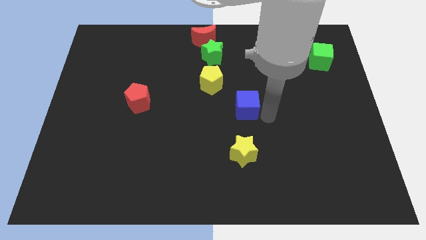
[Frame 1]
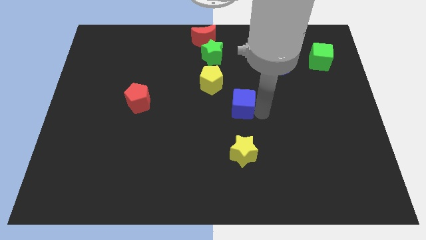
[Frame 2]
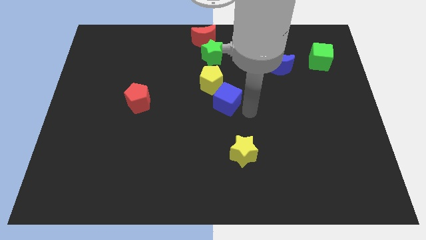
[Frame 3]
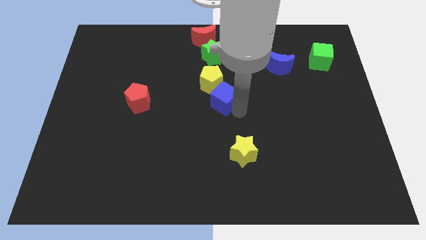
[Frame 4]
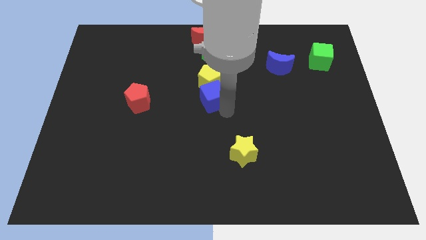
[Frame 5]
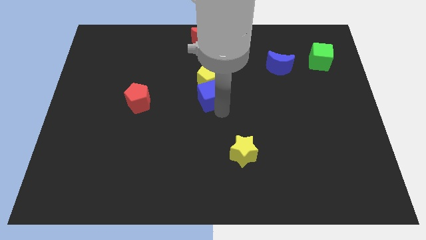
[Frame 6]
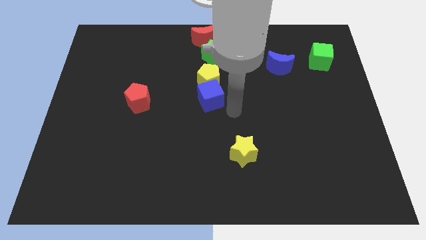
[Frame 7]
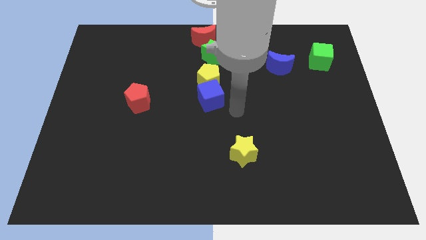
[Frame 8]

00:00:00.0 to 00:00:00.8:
push the blue cube into the yellow pentagon

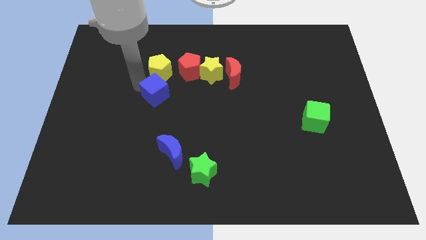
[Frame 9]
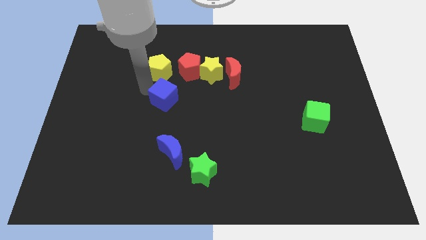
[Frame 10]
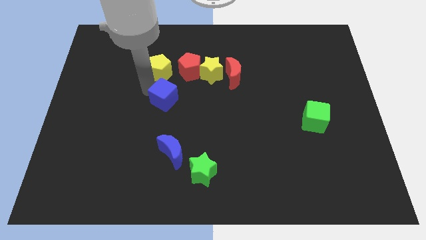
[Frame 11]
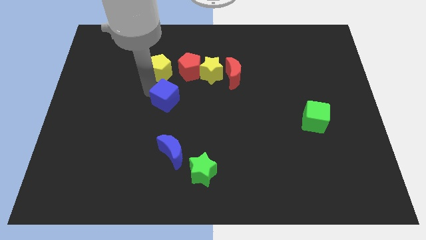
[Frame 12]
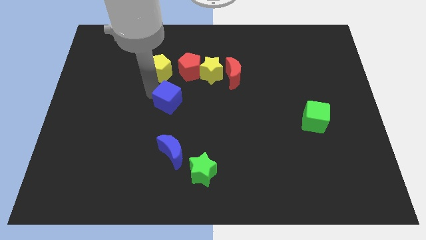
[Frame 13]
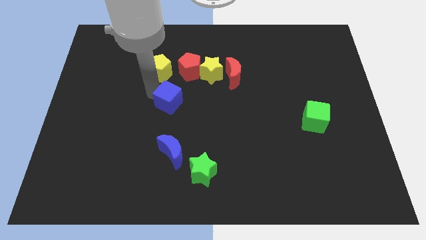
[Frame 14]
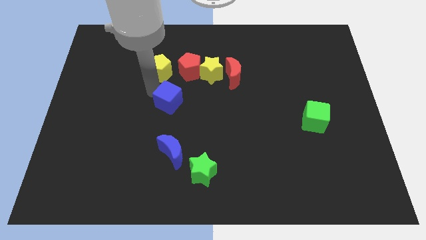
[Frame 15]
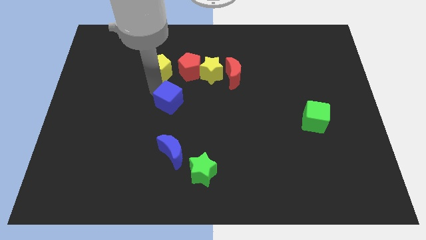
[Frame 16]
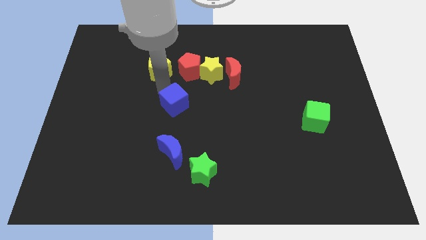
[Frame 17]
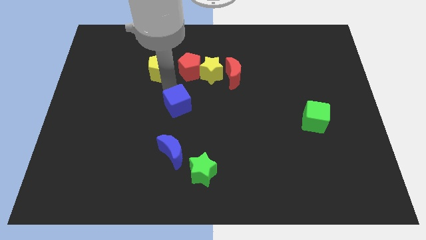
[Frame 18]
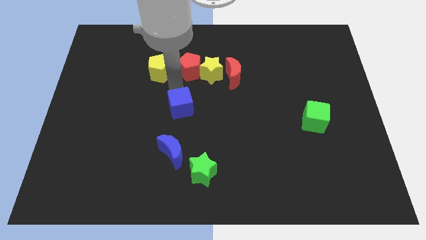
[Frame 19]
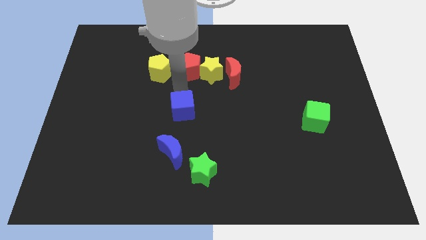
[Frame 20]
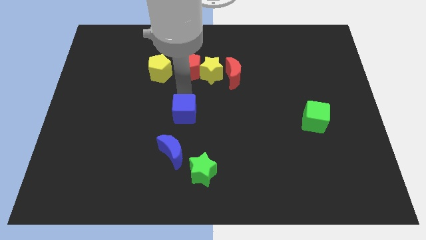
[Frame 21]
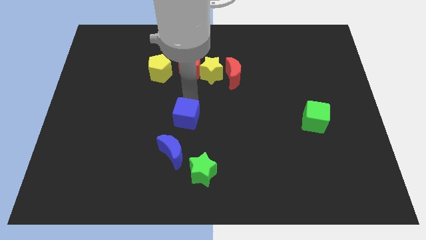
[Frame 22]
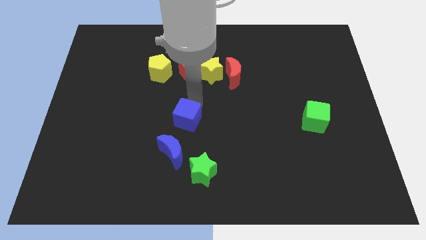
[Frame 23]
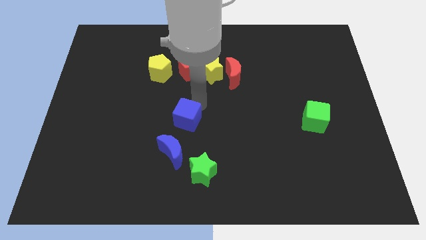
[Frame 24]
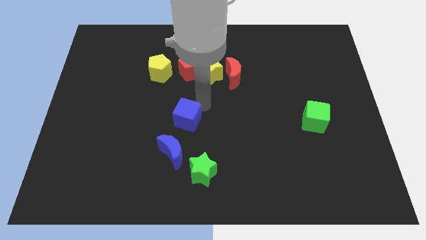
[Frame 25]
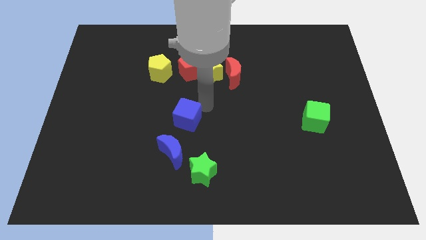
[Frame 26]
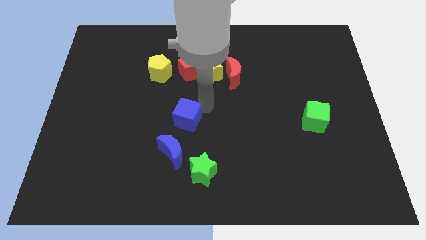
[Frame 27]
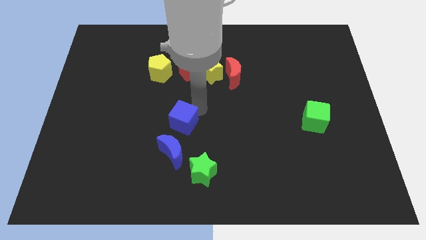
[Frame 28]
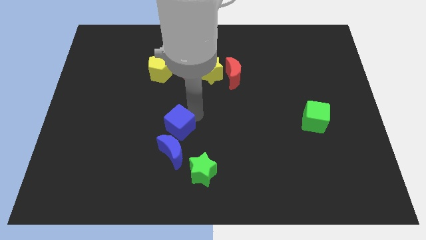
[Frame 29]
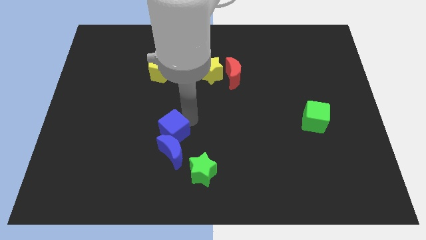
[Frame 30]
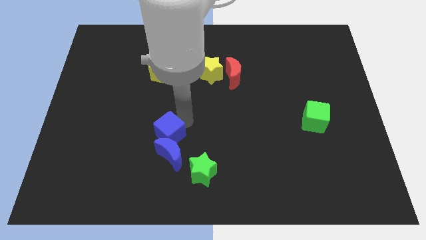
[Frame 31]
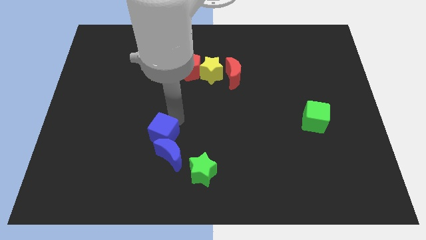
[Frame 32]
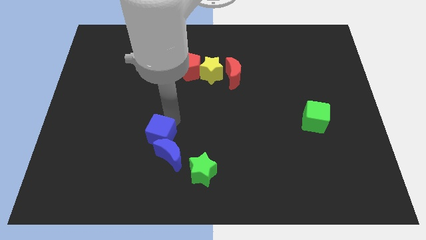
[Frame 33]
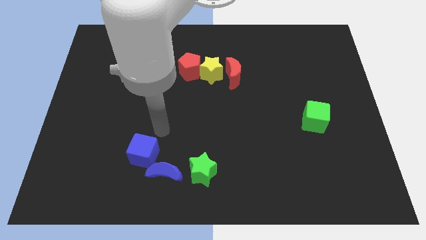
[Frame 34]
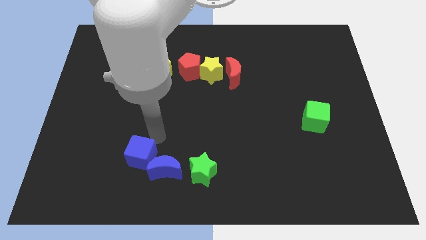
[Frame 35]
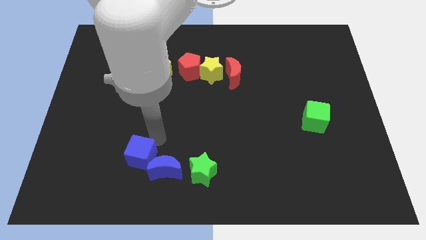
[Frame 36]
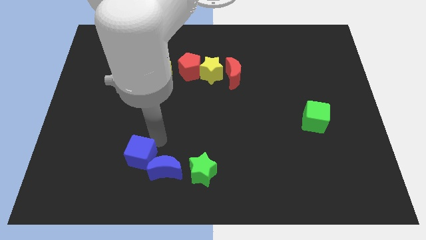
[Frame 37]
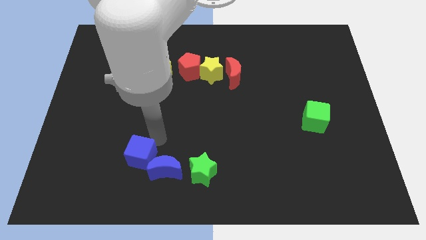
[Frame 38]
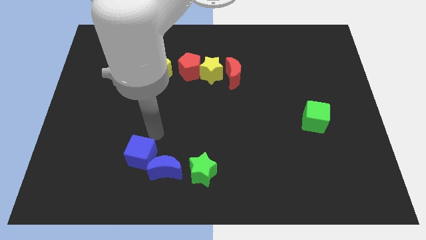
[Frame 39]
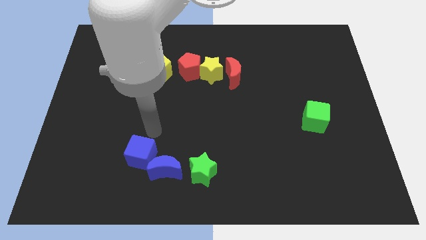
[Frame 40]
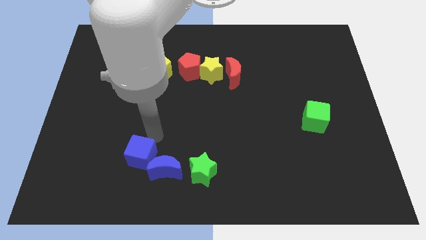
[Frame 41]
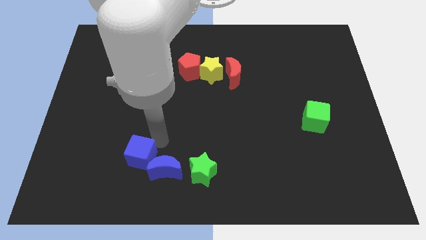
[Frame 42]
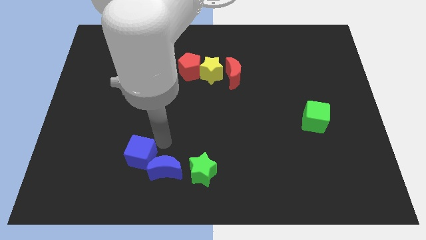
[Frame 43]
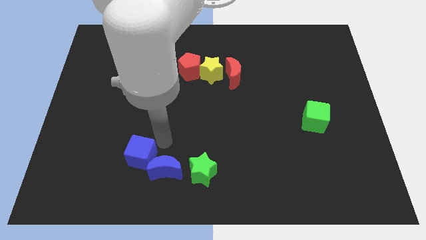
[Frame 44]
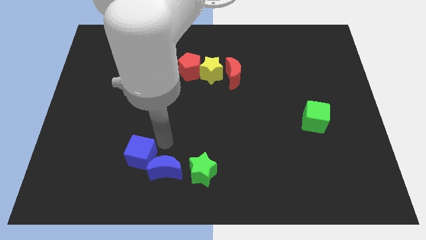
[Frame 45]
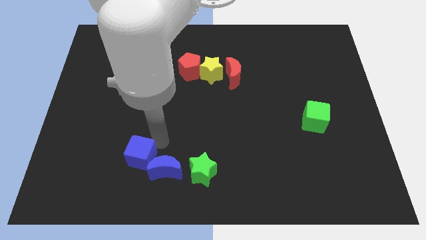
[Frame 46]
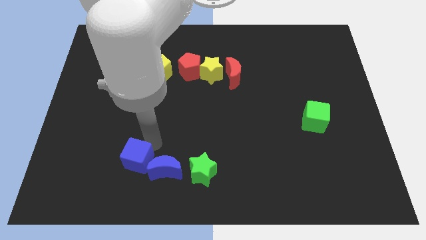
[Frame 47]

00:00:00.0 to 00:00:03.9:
push blue crescent with the blue cube

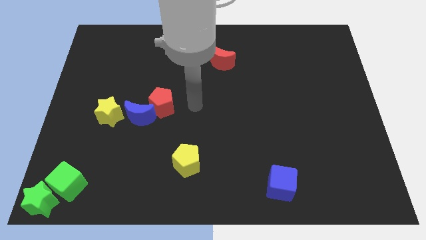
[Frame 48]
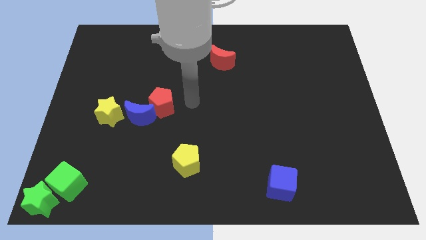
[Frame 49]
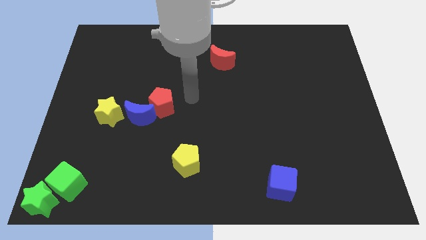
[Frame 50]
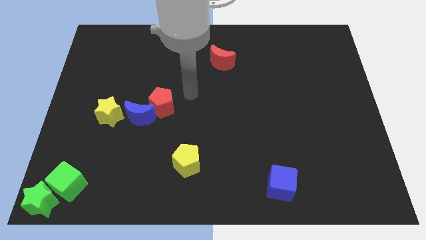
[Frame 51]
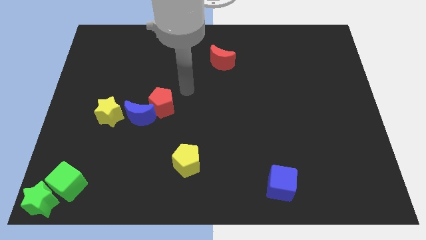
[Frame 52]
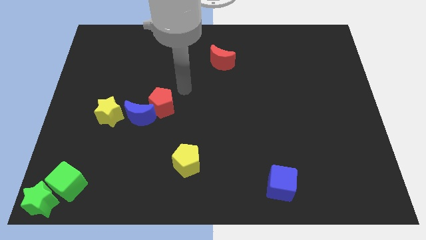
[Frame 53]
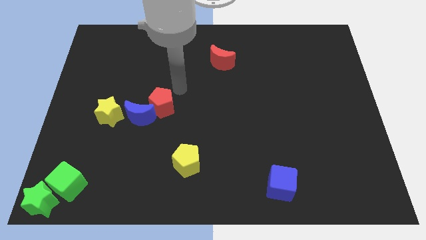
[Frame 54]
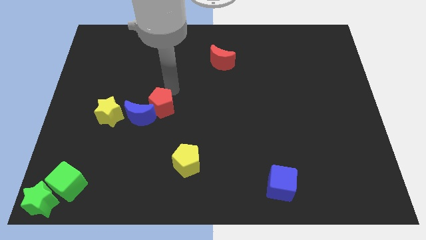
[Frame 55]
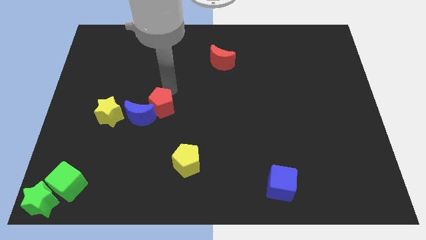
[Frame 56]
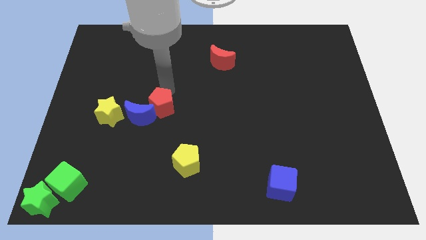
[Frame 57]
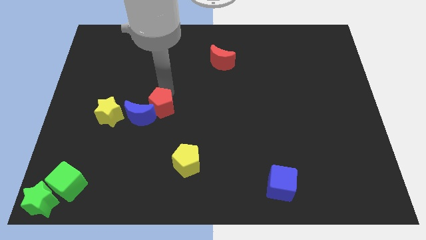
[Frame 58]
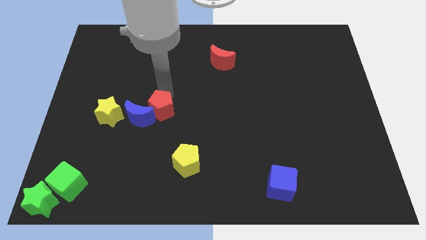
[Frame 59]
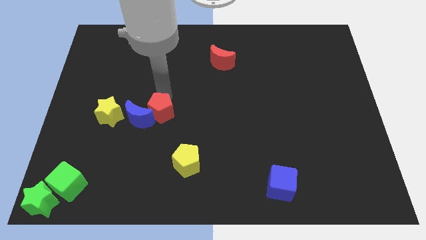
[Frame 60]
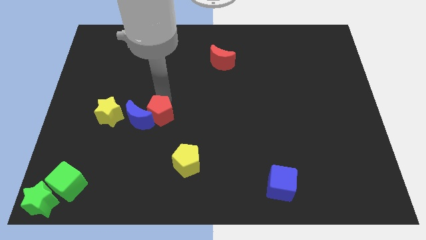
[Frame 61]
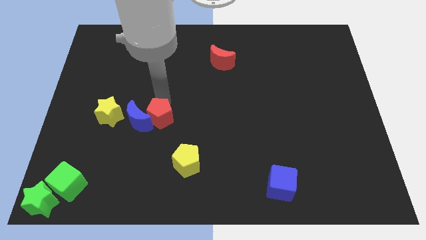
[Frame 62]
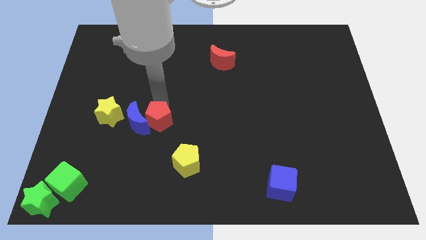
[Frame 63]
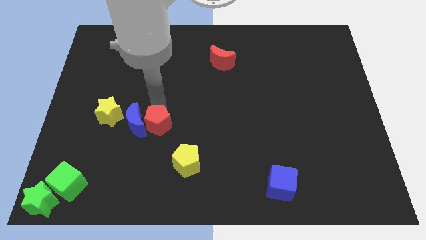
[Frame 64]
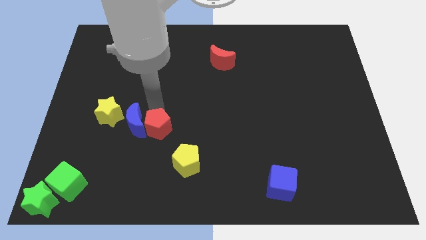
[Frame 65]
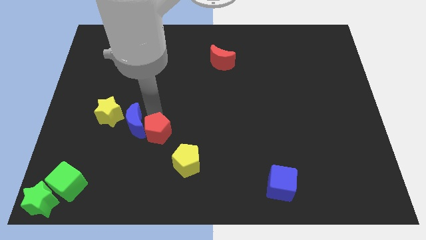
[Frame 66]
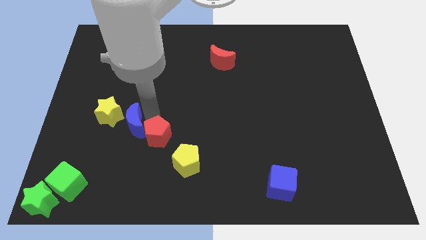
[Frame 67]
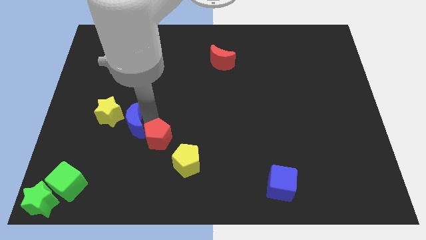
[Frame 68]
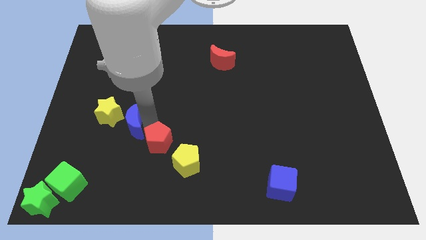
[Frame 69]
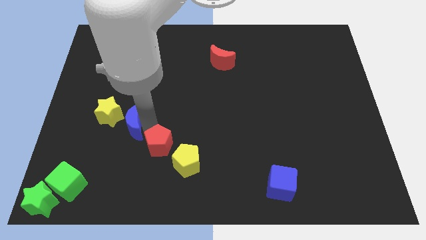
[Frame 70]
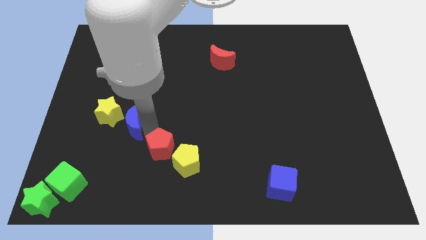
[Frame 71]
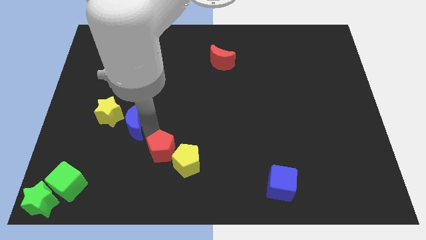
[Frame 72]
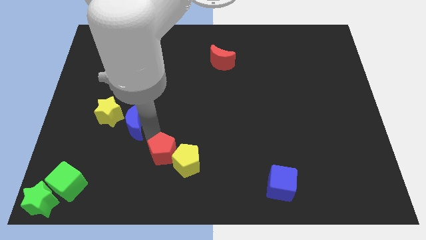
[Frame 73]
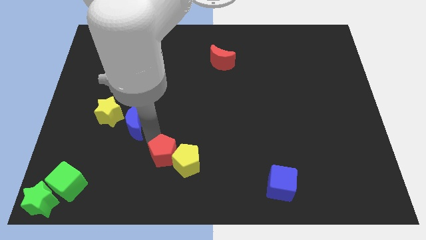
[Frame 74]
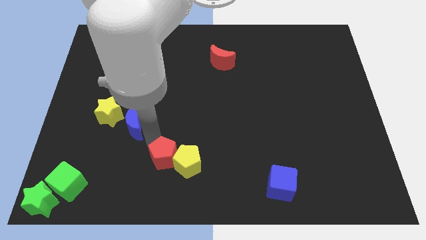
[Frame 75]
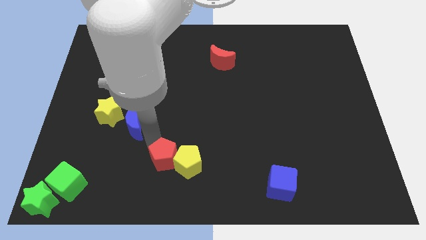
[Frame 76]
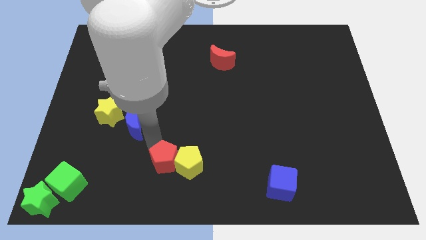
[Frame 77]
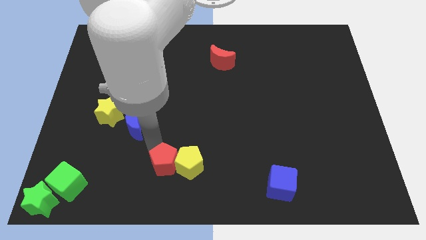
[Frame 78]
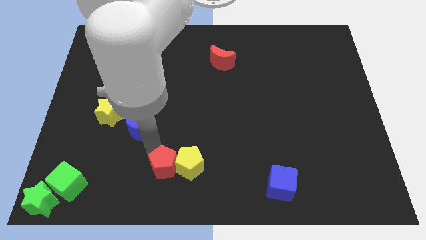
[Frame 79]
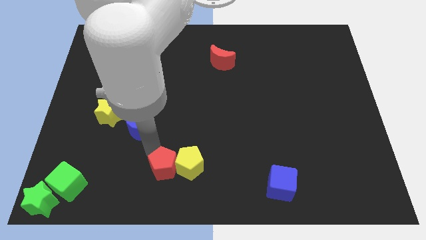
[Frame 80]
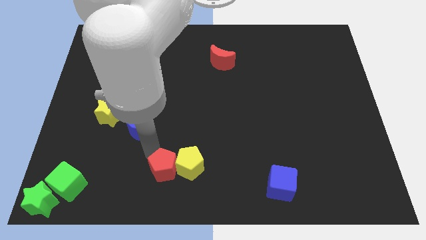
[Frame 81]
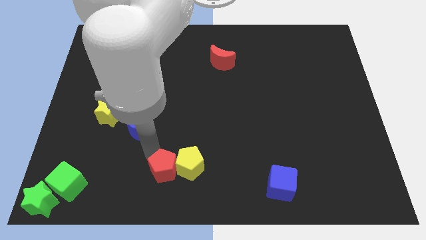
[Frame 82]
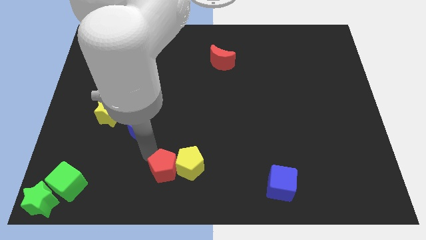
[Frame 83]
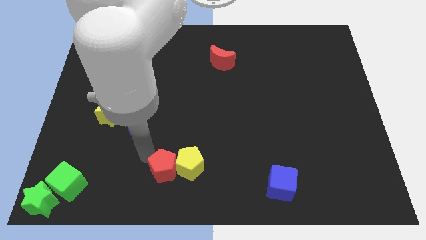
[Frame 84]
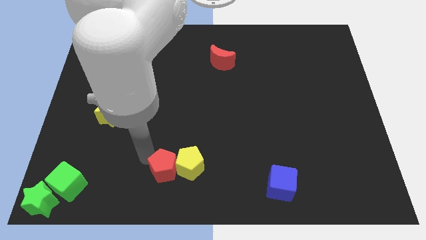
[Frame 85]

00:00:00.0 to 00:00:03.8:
drag the red pentagon left to the yellow pentagon

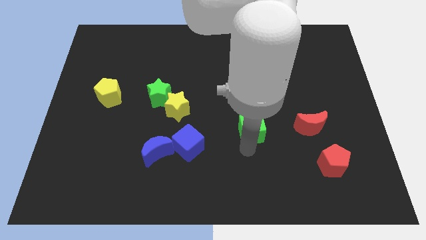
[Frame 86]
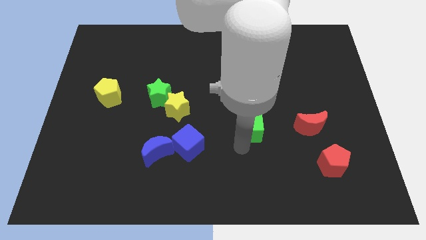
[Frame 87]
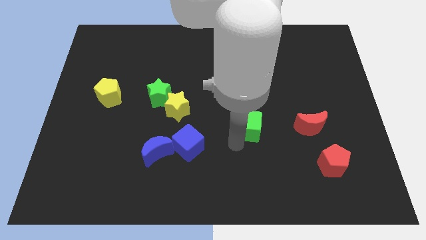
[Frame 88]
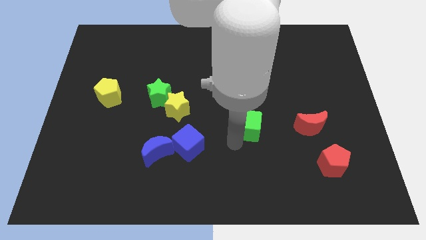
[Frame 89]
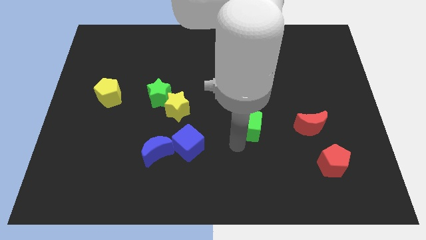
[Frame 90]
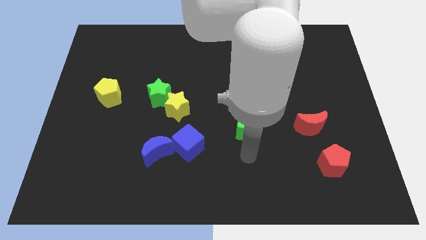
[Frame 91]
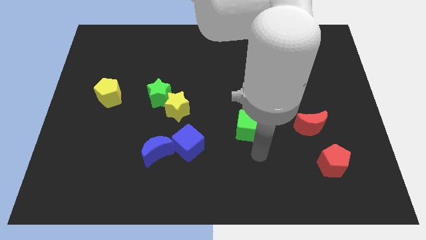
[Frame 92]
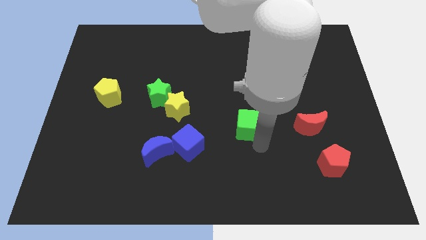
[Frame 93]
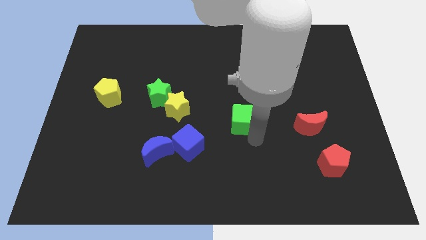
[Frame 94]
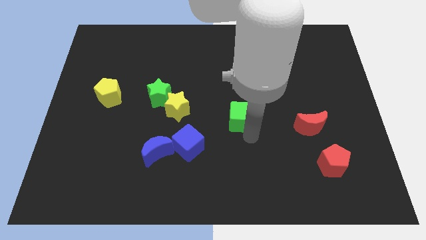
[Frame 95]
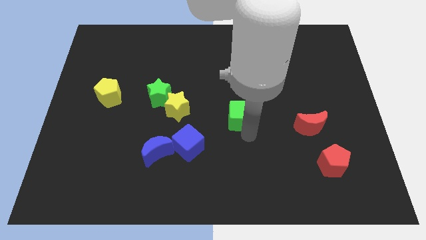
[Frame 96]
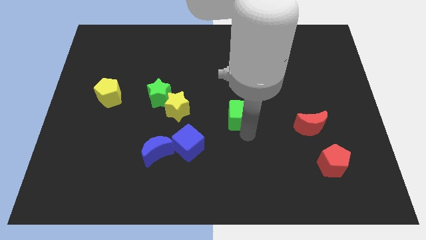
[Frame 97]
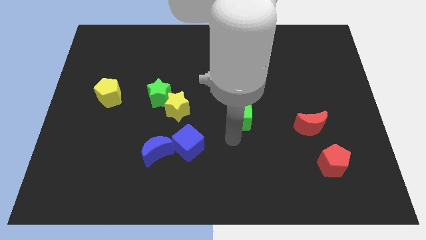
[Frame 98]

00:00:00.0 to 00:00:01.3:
push green cube slightly towards its top
